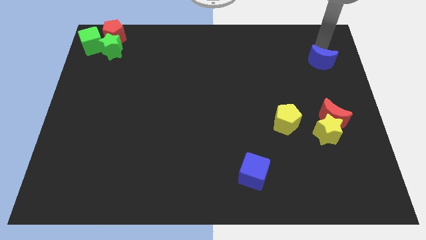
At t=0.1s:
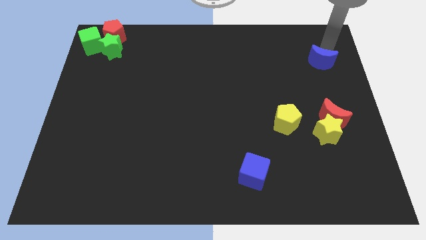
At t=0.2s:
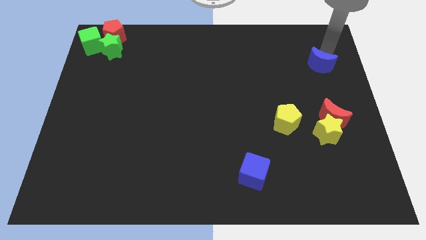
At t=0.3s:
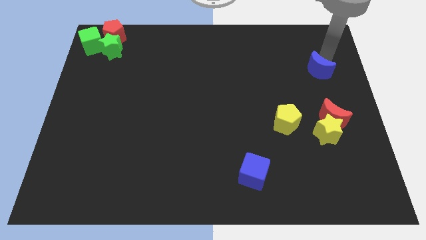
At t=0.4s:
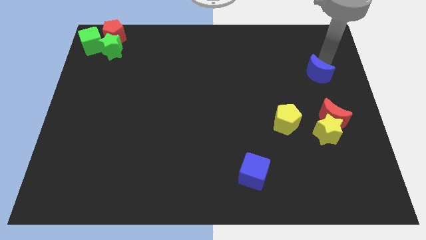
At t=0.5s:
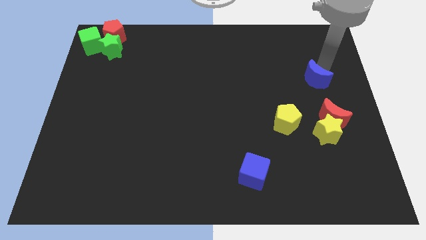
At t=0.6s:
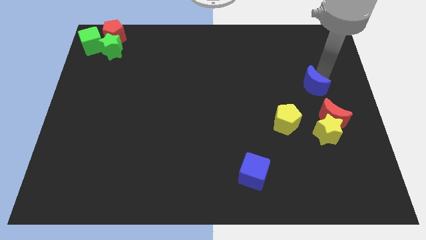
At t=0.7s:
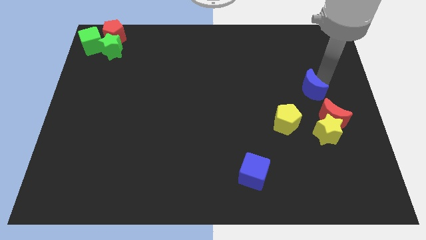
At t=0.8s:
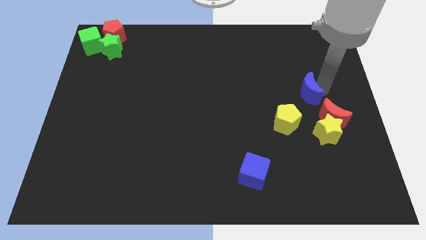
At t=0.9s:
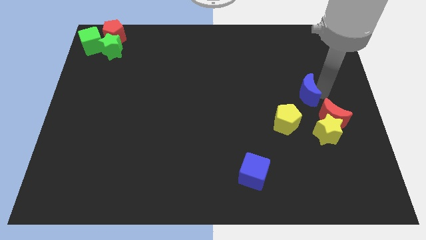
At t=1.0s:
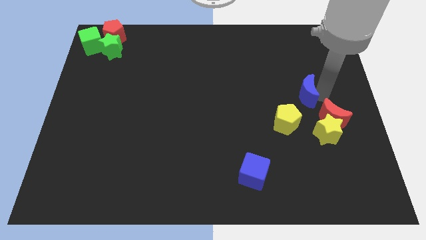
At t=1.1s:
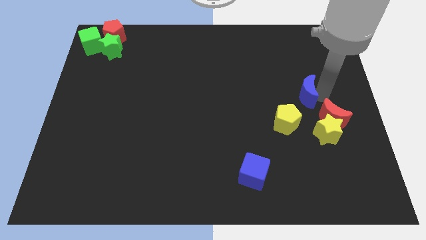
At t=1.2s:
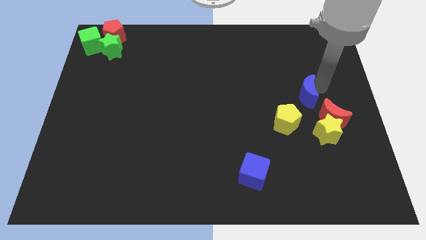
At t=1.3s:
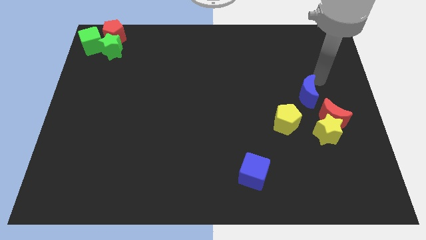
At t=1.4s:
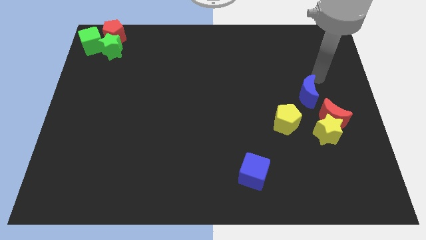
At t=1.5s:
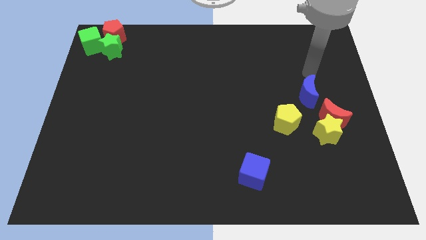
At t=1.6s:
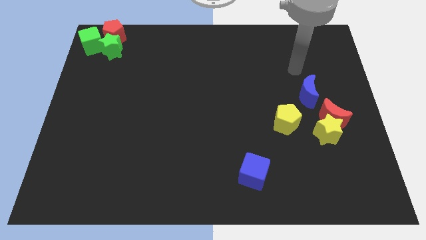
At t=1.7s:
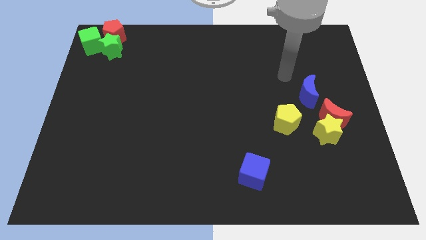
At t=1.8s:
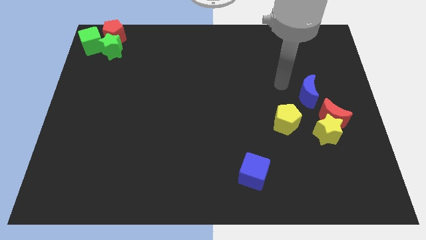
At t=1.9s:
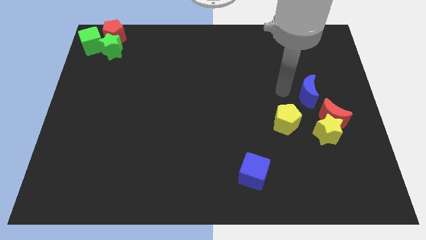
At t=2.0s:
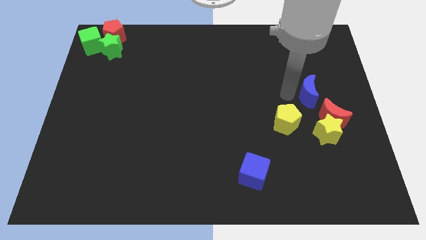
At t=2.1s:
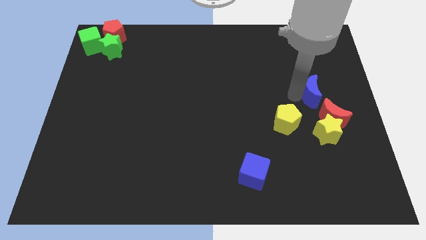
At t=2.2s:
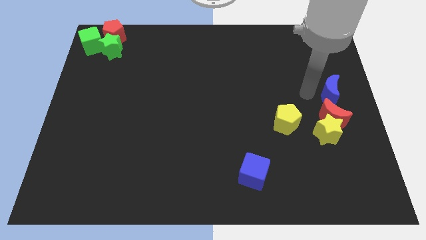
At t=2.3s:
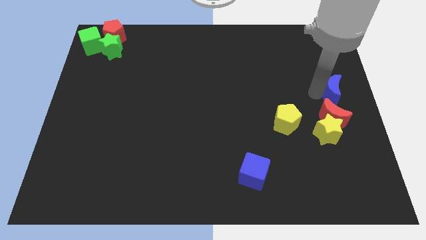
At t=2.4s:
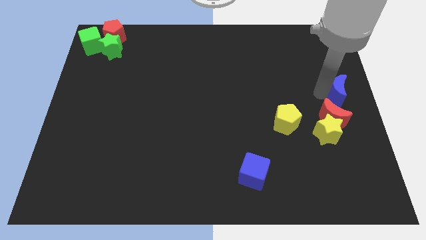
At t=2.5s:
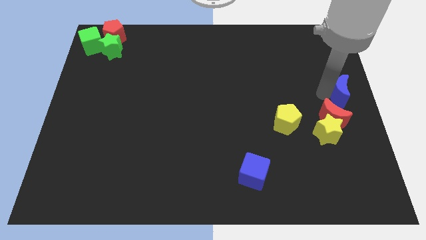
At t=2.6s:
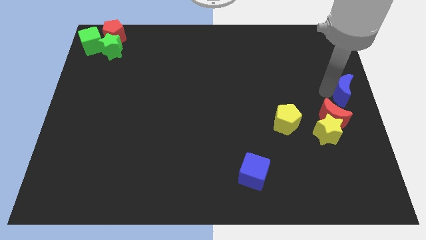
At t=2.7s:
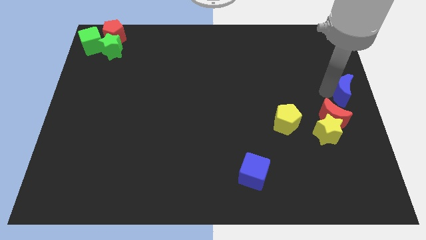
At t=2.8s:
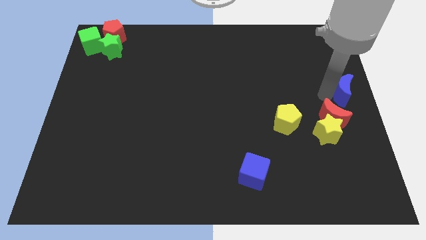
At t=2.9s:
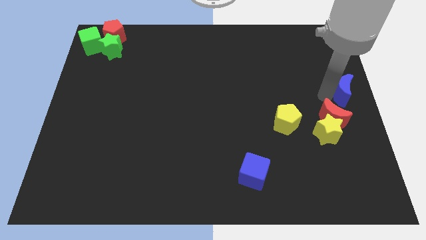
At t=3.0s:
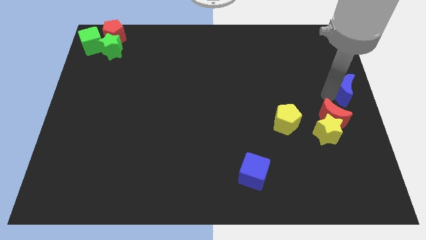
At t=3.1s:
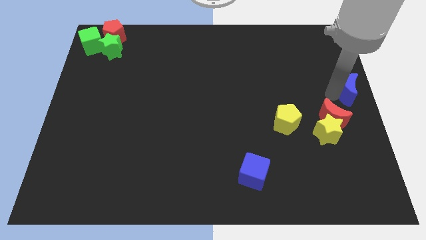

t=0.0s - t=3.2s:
push the blue moon vertically above the red moon

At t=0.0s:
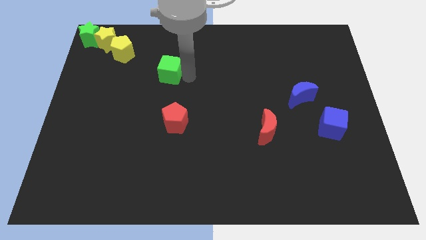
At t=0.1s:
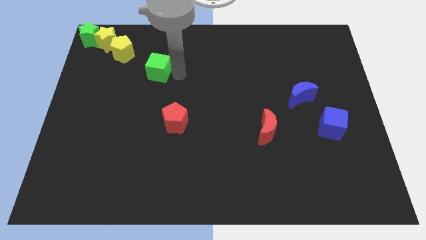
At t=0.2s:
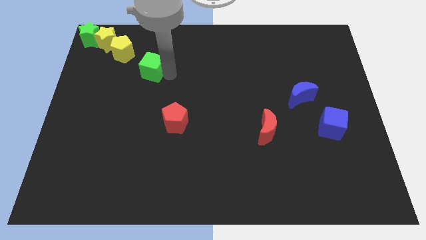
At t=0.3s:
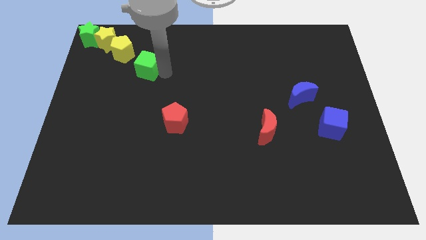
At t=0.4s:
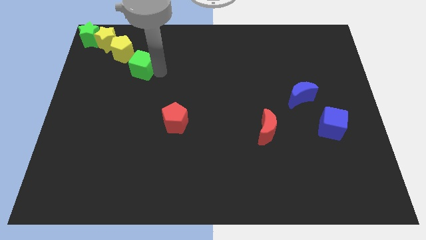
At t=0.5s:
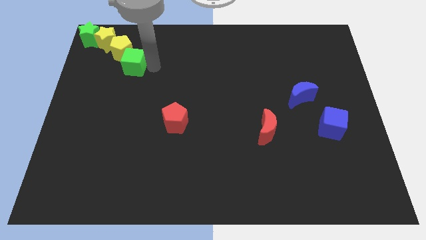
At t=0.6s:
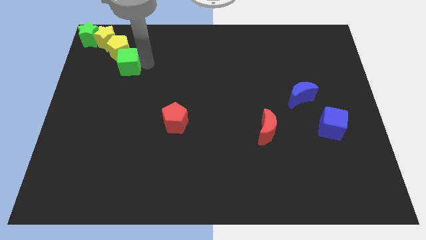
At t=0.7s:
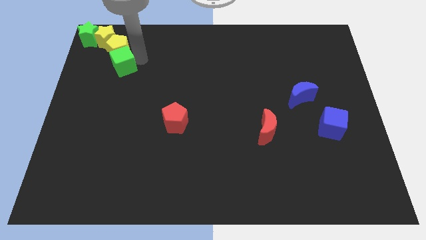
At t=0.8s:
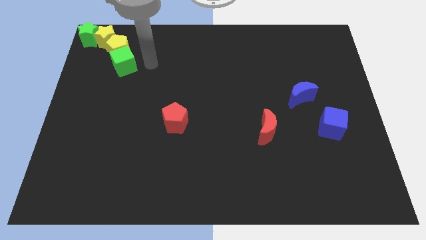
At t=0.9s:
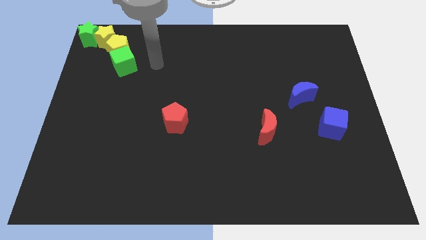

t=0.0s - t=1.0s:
place the green cube at the bottom of the yellow pentagon

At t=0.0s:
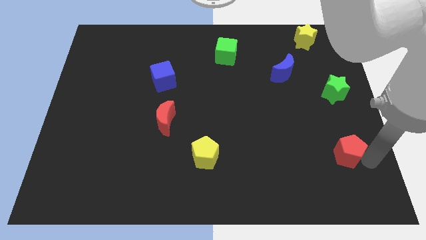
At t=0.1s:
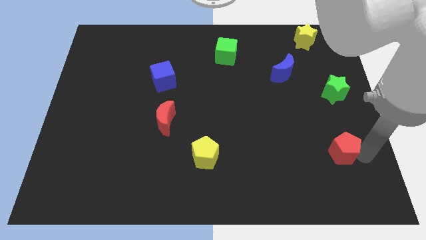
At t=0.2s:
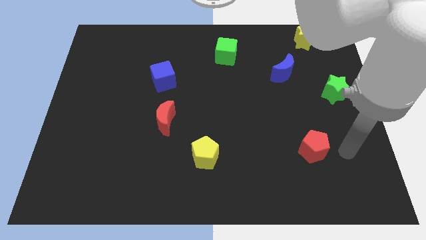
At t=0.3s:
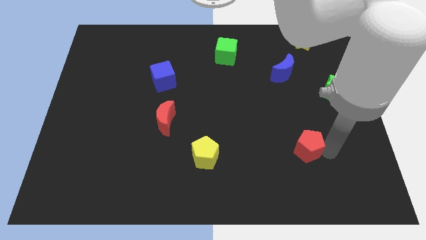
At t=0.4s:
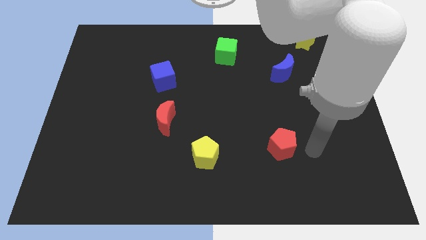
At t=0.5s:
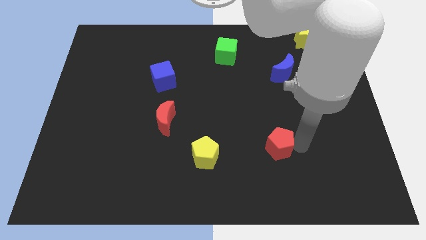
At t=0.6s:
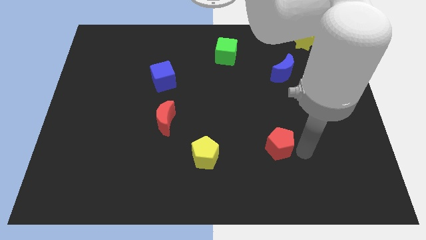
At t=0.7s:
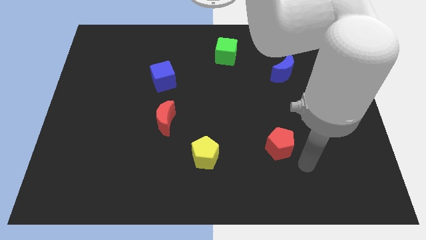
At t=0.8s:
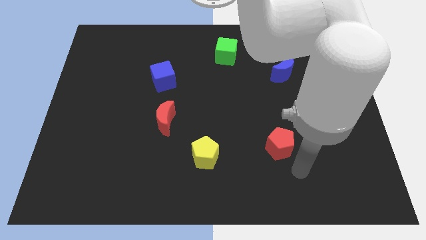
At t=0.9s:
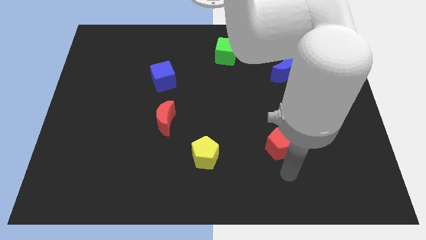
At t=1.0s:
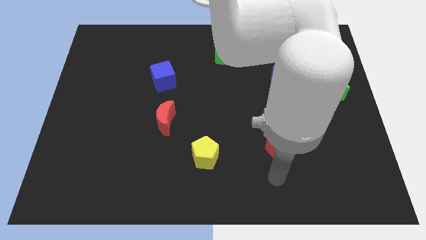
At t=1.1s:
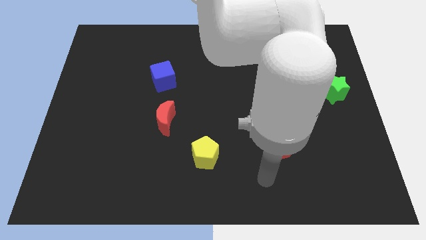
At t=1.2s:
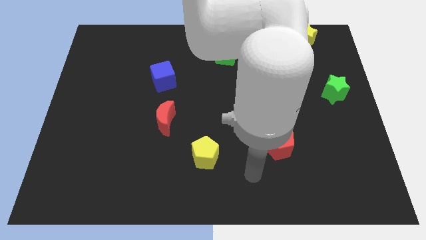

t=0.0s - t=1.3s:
push the red pentagon to the right side of the yellow pentagon

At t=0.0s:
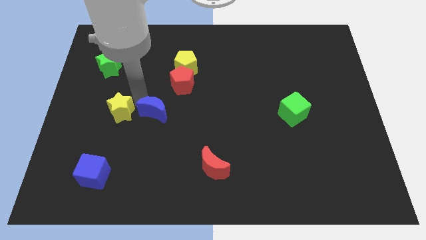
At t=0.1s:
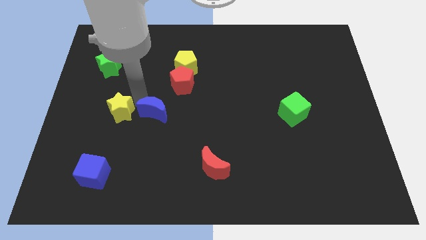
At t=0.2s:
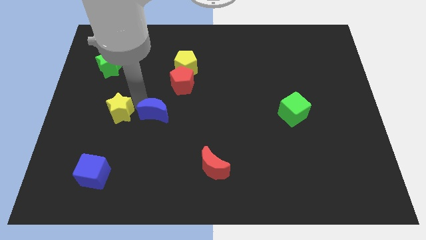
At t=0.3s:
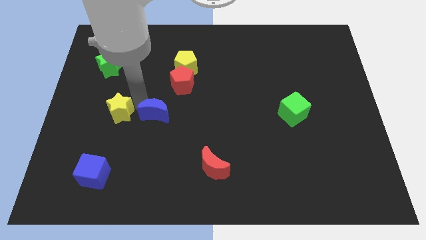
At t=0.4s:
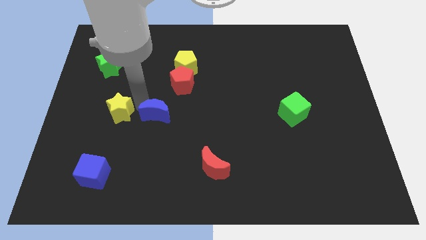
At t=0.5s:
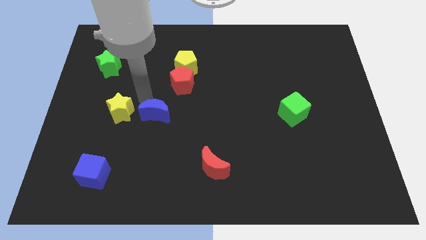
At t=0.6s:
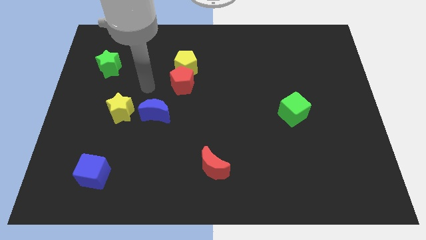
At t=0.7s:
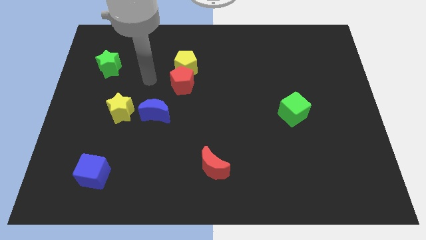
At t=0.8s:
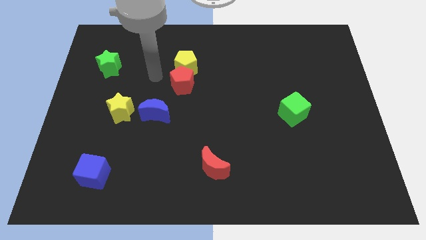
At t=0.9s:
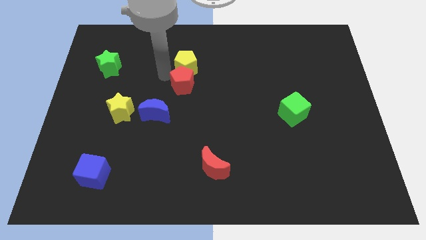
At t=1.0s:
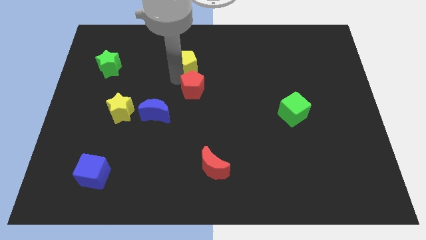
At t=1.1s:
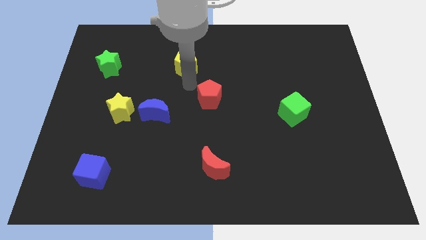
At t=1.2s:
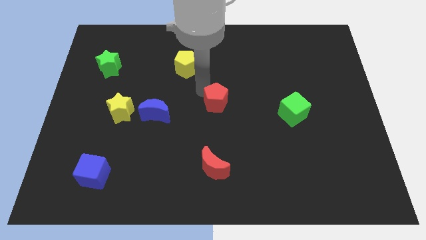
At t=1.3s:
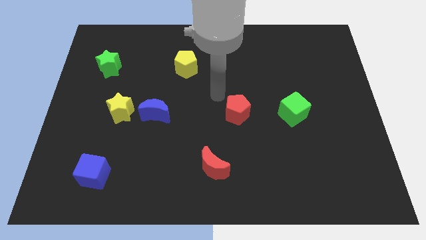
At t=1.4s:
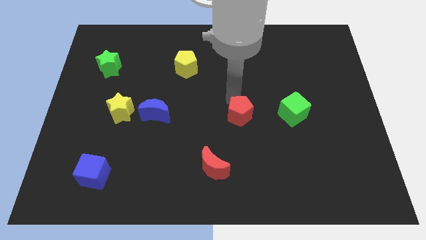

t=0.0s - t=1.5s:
place the red pentagon left to the green cube

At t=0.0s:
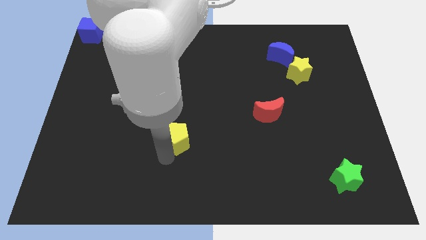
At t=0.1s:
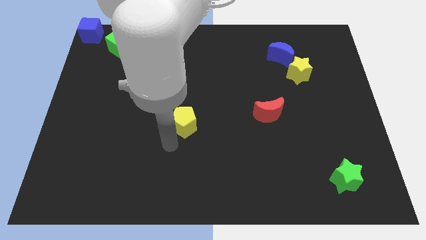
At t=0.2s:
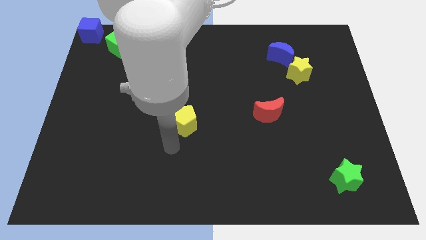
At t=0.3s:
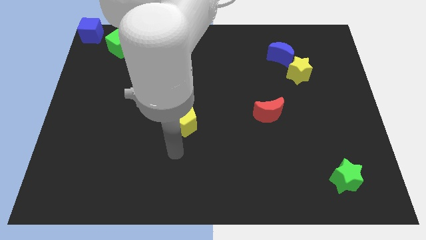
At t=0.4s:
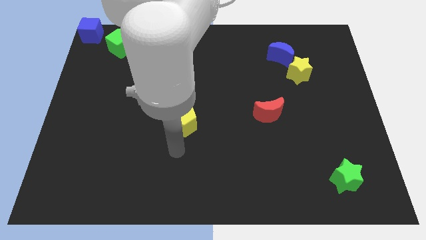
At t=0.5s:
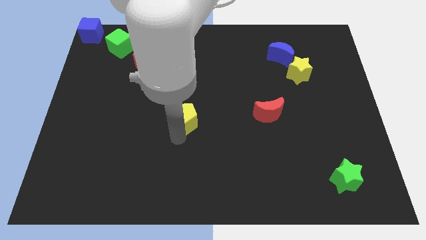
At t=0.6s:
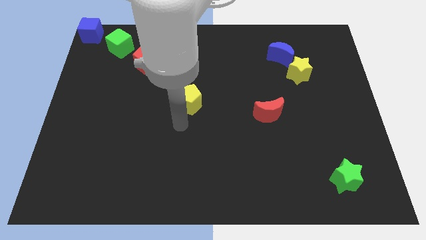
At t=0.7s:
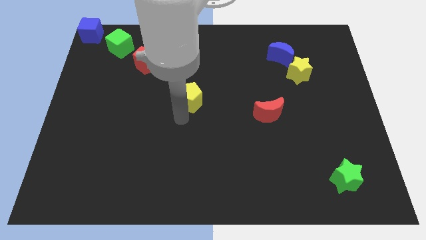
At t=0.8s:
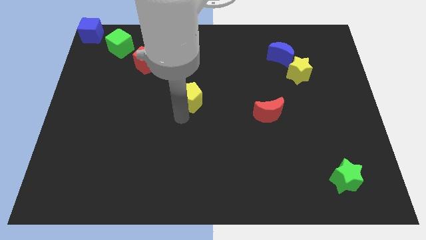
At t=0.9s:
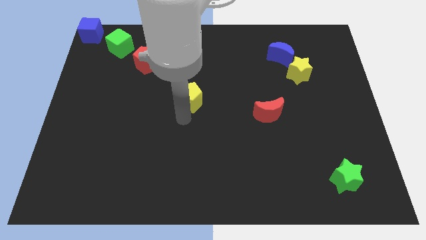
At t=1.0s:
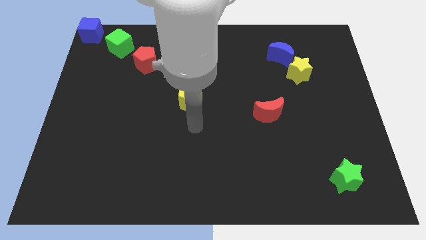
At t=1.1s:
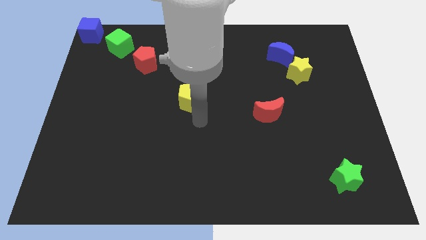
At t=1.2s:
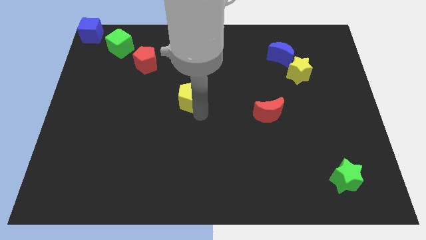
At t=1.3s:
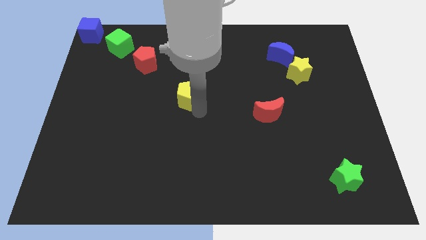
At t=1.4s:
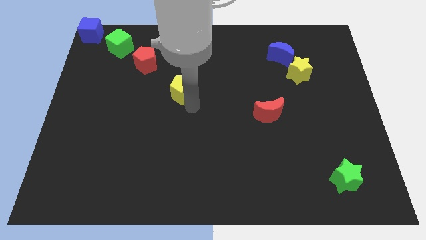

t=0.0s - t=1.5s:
place the yellow star diagonal to the red pentagon

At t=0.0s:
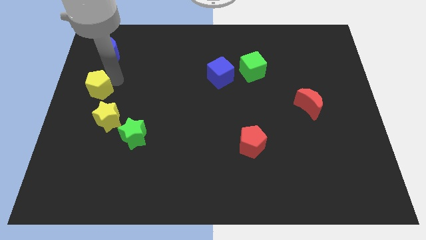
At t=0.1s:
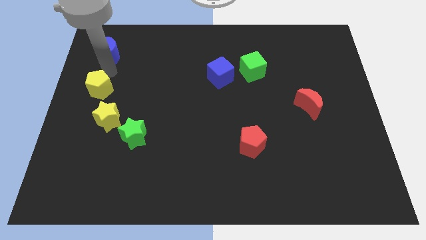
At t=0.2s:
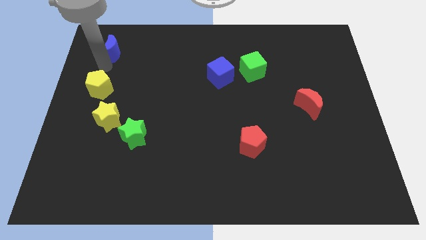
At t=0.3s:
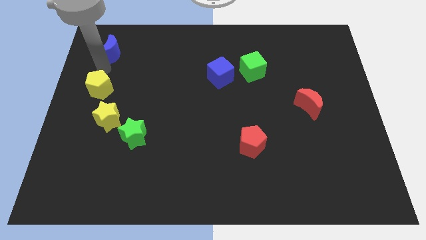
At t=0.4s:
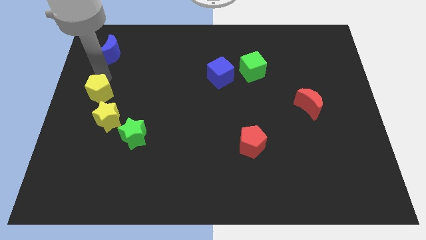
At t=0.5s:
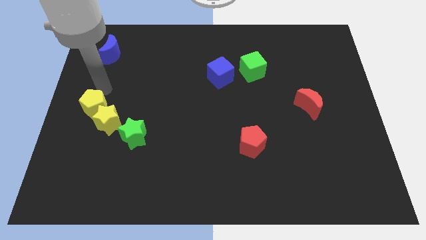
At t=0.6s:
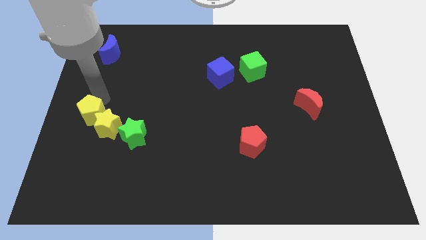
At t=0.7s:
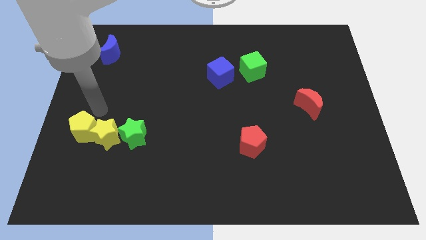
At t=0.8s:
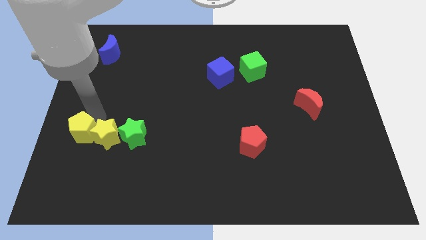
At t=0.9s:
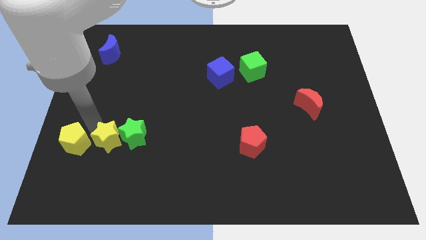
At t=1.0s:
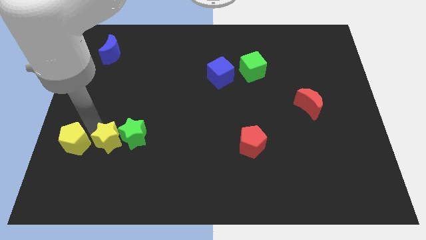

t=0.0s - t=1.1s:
move the yellow pentagon to the left of the yellow star
